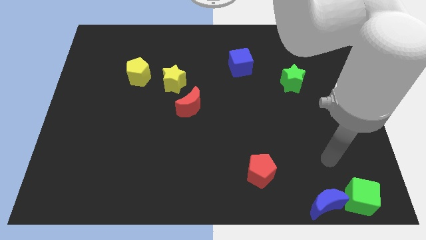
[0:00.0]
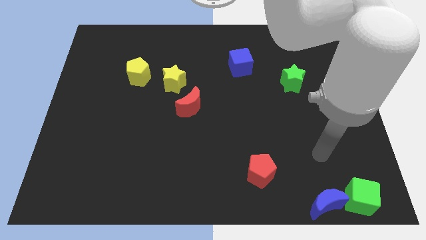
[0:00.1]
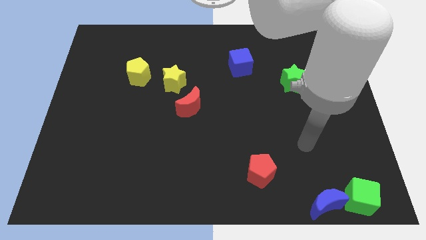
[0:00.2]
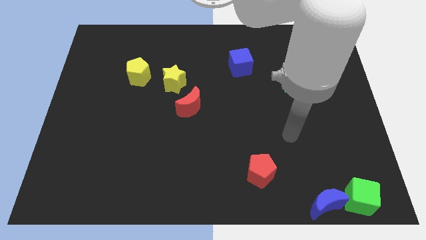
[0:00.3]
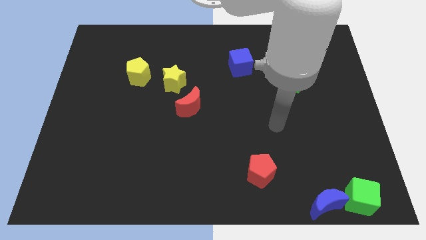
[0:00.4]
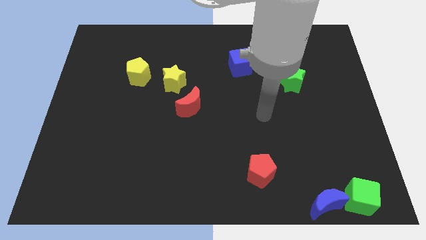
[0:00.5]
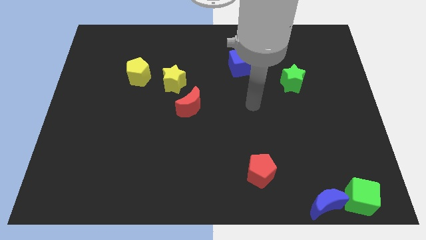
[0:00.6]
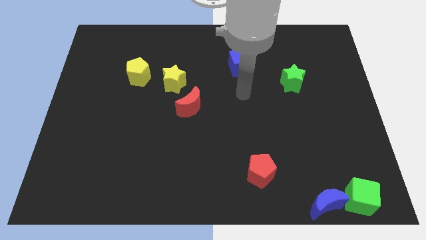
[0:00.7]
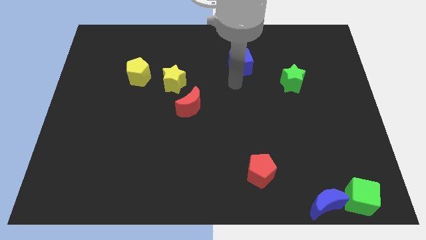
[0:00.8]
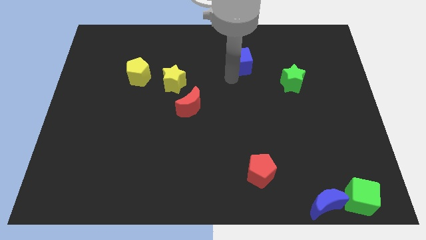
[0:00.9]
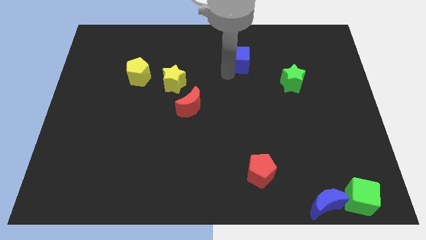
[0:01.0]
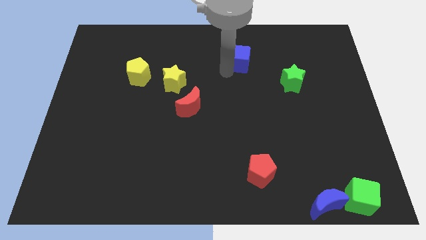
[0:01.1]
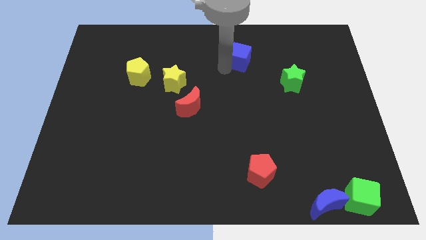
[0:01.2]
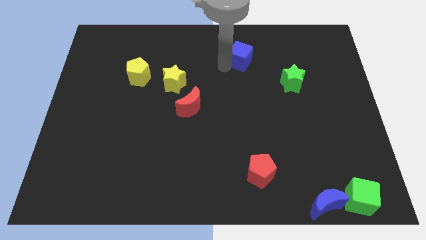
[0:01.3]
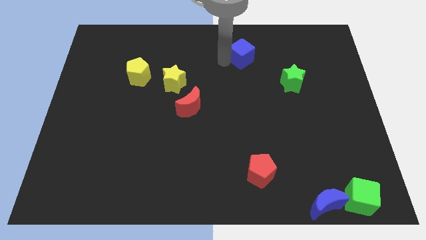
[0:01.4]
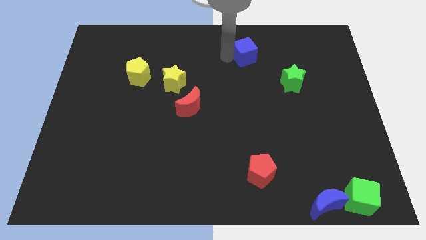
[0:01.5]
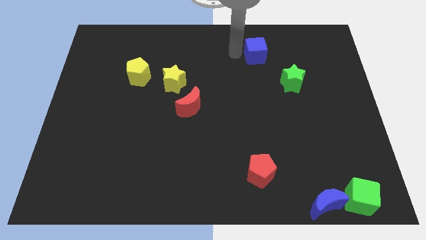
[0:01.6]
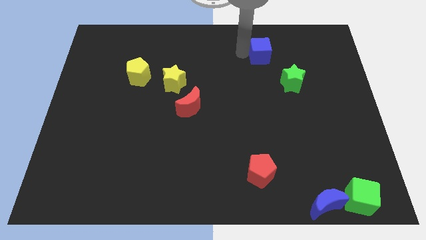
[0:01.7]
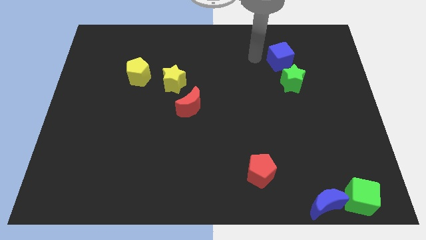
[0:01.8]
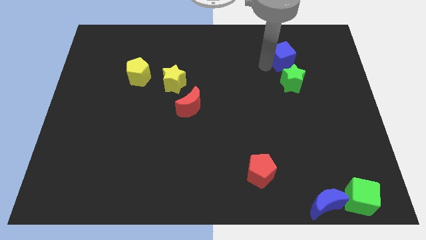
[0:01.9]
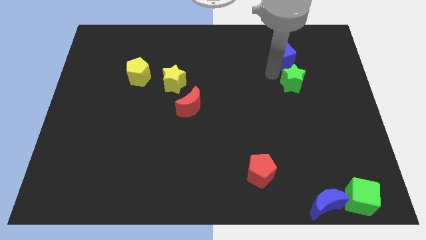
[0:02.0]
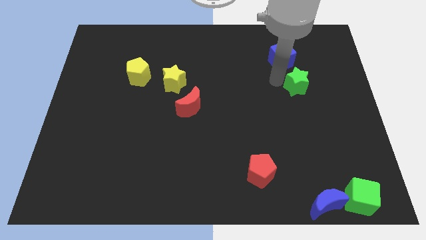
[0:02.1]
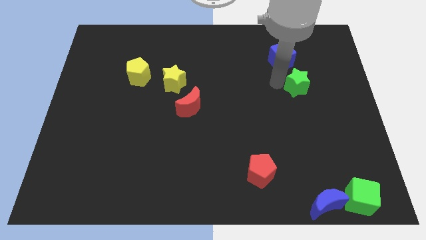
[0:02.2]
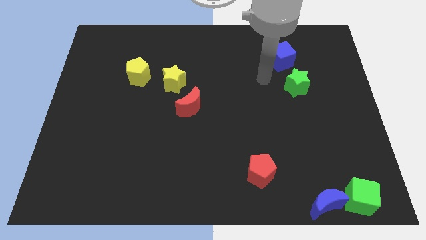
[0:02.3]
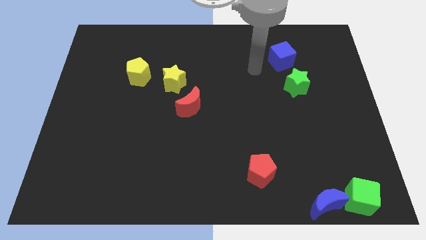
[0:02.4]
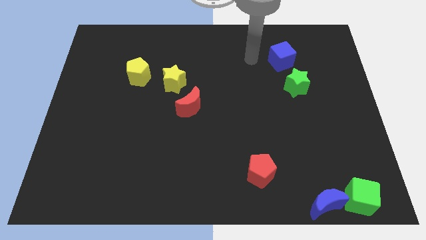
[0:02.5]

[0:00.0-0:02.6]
put the blue cube above the green star

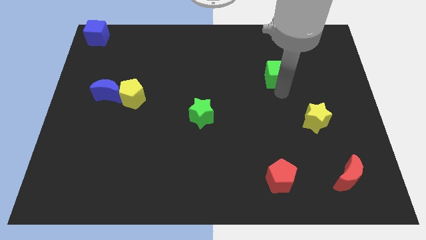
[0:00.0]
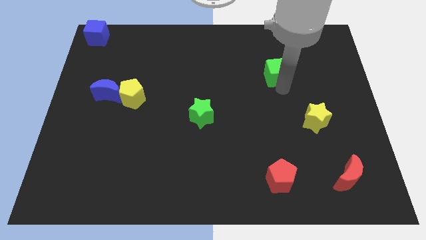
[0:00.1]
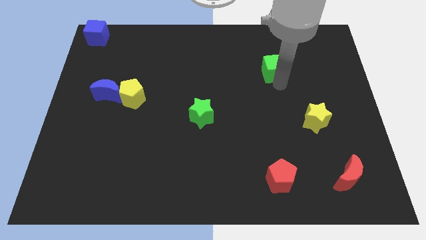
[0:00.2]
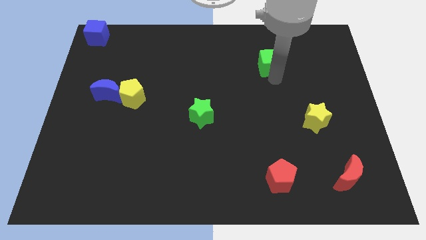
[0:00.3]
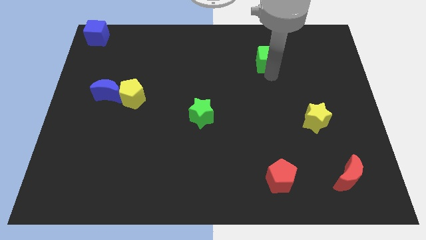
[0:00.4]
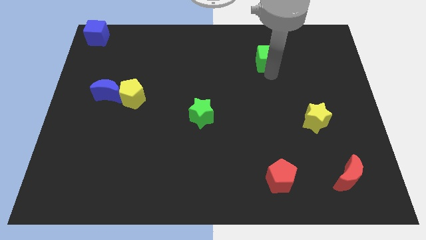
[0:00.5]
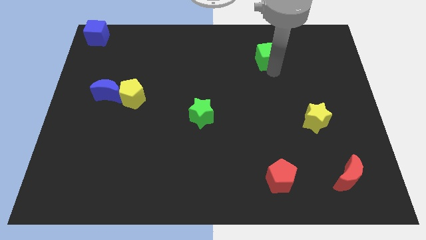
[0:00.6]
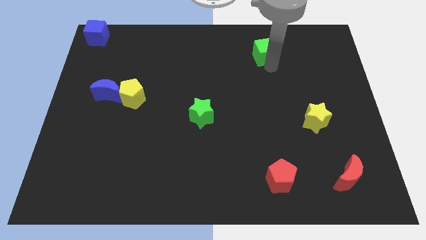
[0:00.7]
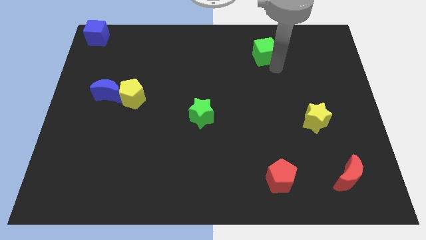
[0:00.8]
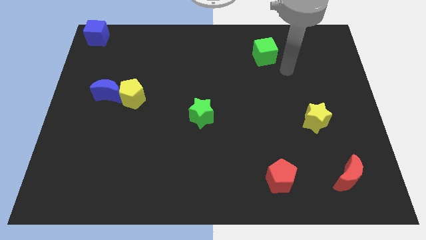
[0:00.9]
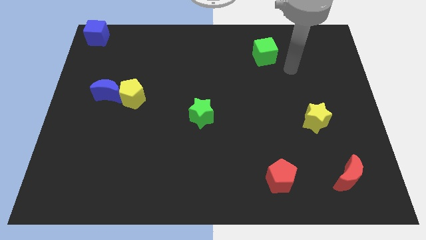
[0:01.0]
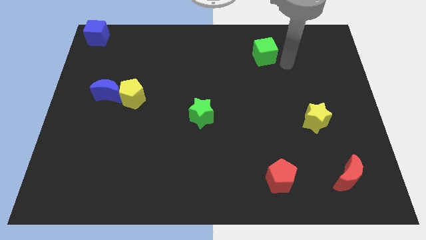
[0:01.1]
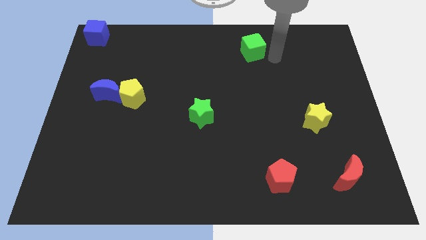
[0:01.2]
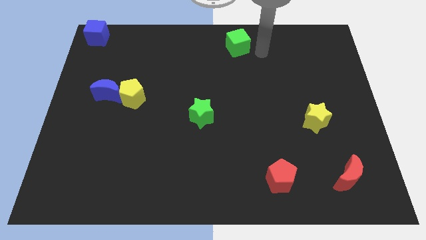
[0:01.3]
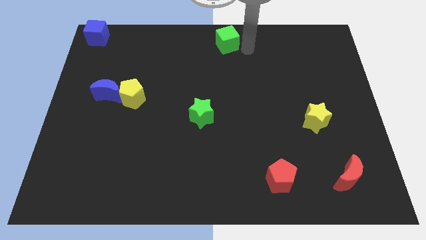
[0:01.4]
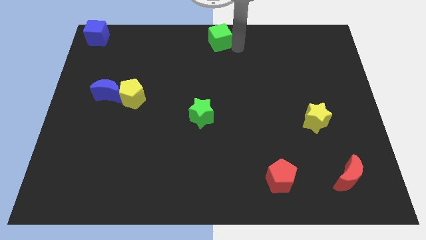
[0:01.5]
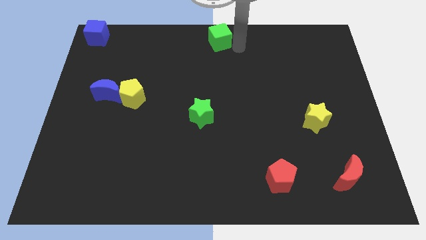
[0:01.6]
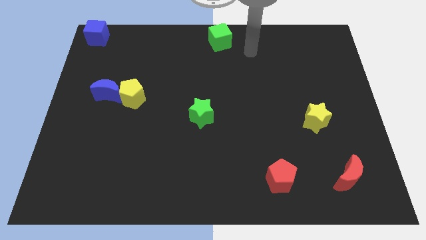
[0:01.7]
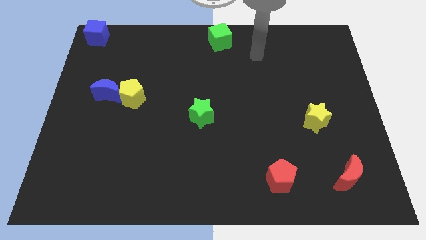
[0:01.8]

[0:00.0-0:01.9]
place the green cube at the top center of the board

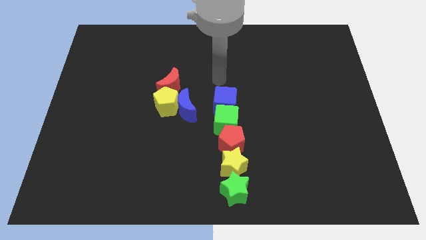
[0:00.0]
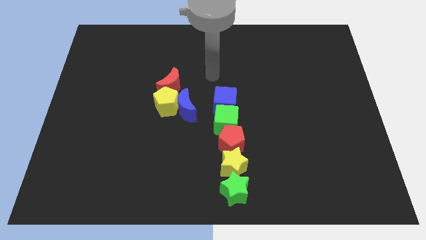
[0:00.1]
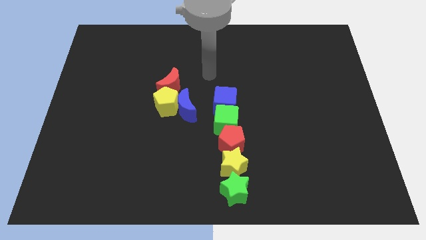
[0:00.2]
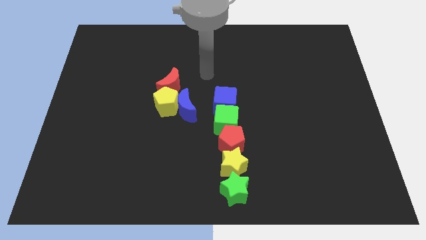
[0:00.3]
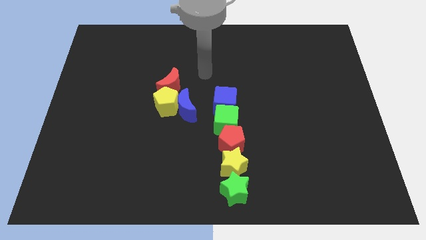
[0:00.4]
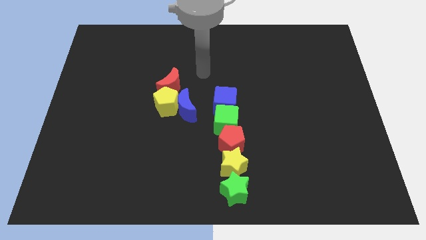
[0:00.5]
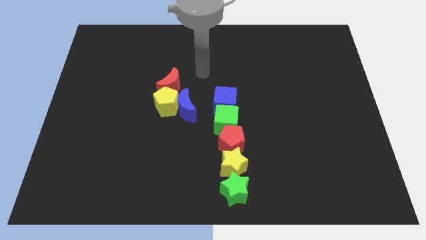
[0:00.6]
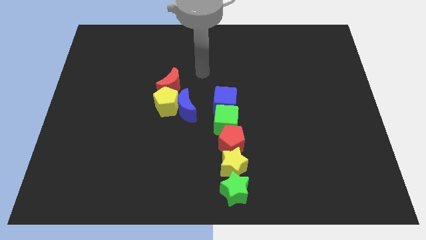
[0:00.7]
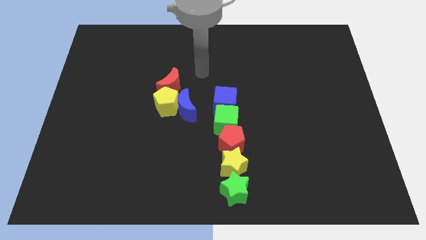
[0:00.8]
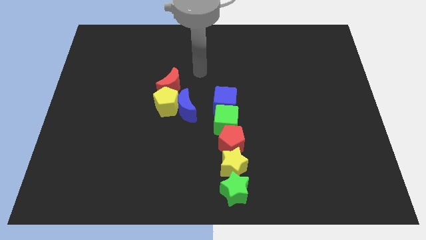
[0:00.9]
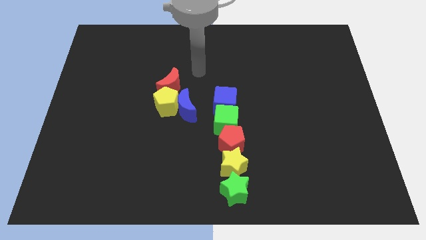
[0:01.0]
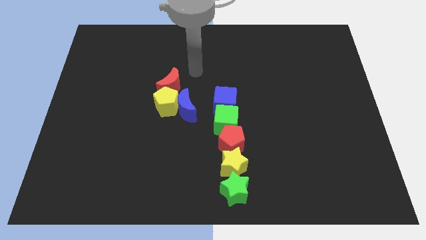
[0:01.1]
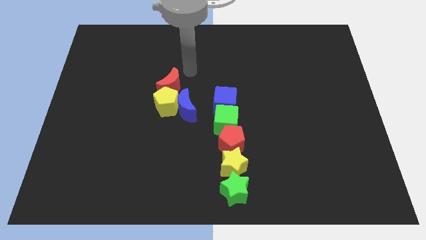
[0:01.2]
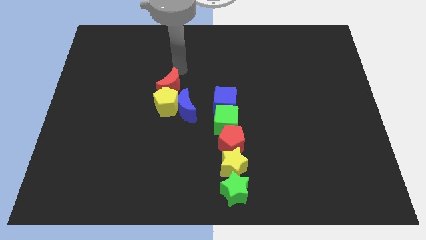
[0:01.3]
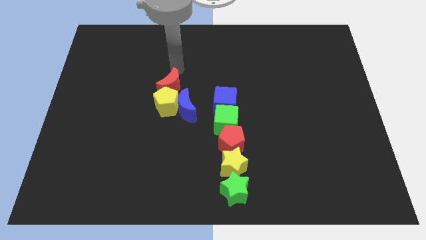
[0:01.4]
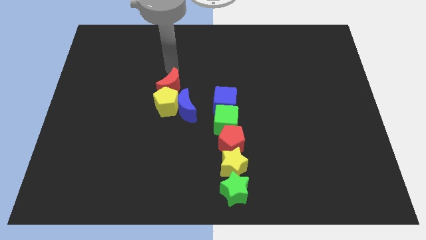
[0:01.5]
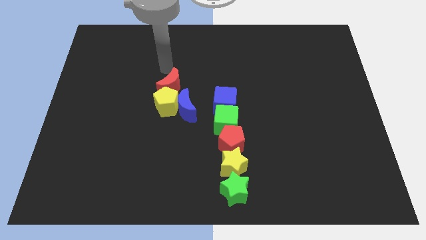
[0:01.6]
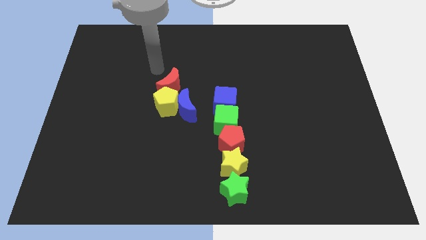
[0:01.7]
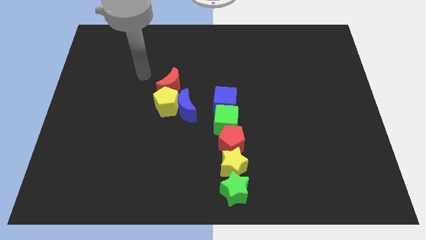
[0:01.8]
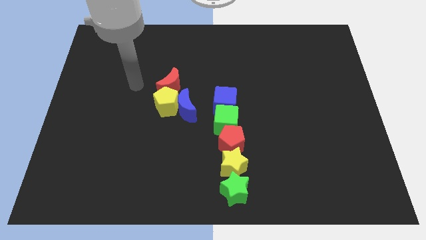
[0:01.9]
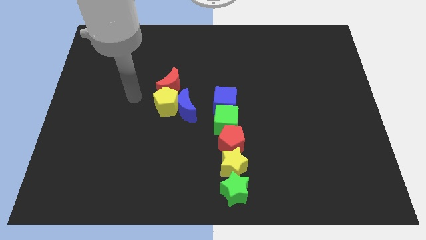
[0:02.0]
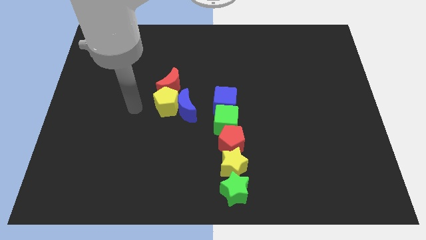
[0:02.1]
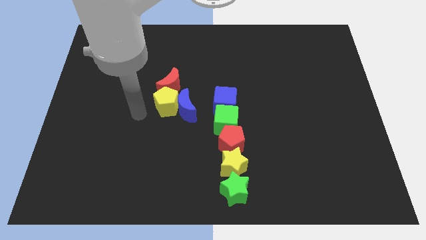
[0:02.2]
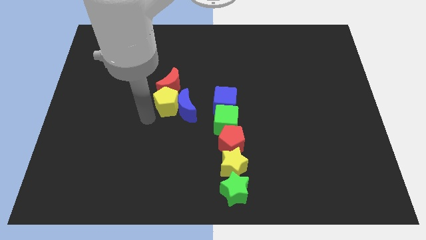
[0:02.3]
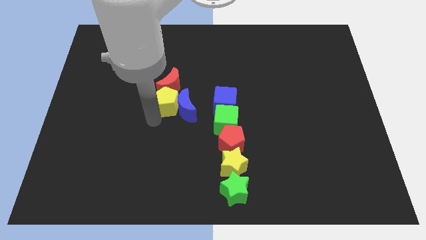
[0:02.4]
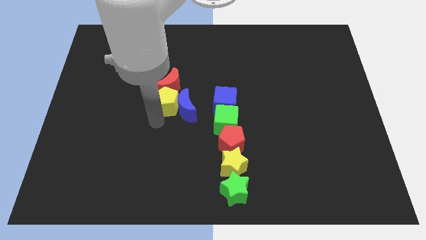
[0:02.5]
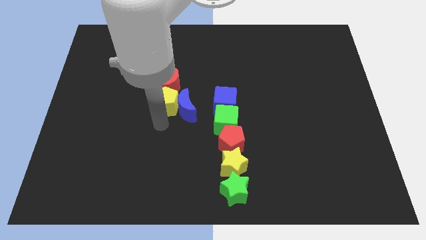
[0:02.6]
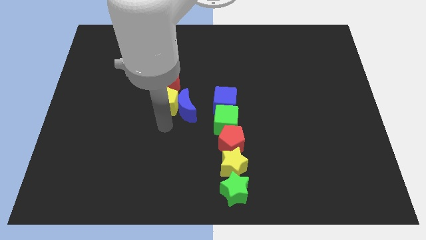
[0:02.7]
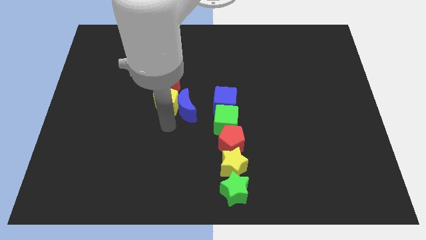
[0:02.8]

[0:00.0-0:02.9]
move the arm to the bottom of the blue moon

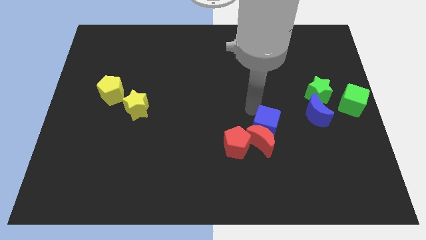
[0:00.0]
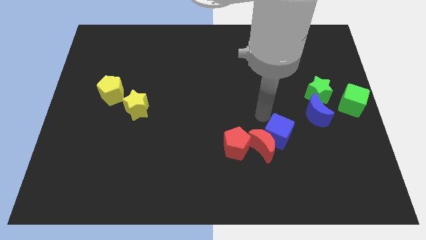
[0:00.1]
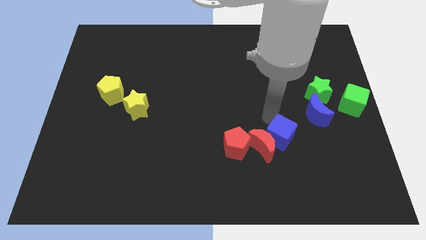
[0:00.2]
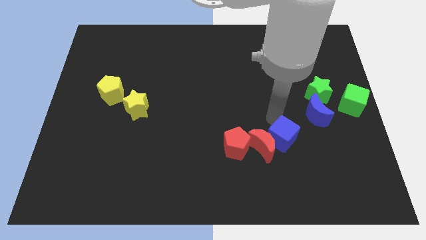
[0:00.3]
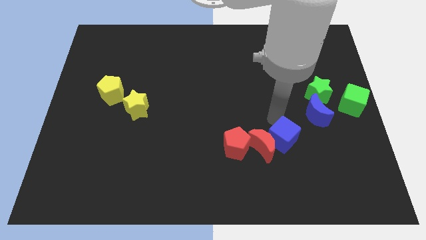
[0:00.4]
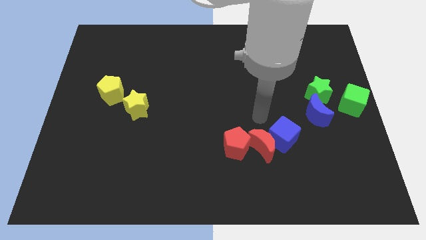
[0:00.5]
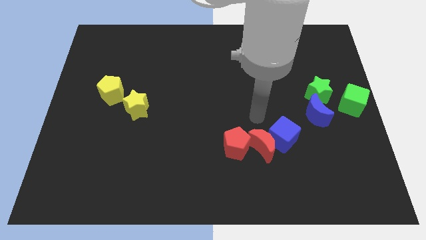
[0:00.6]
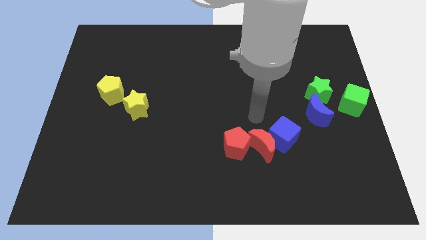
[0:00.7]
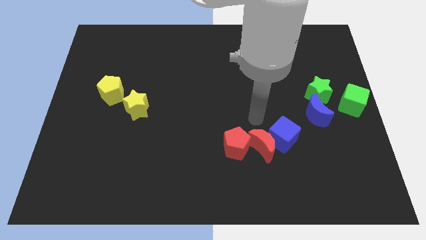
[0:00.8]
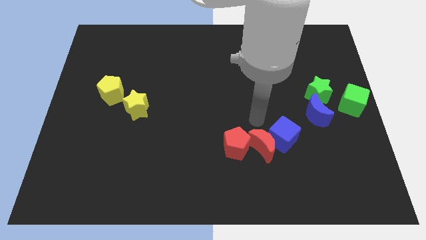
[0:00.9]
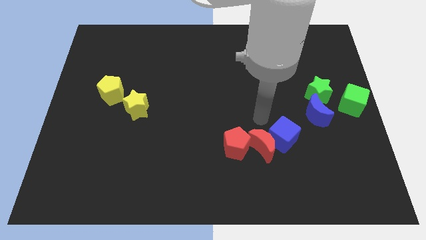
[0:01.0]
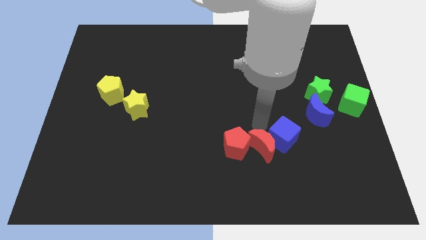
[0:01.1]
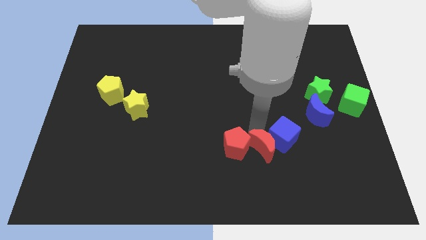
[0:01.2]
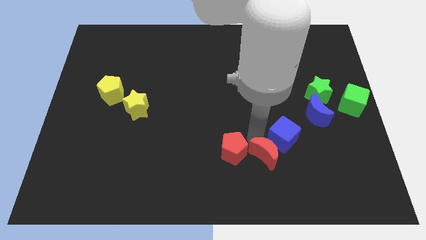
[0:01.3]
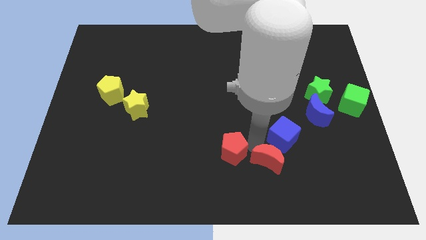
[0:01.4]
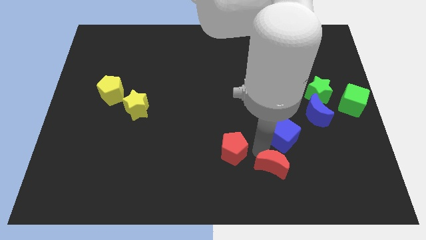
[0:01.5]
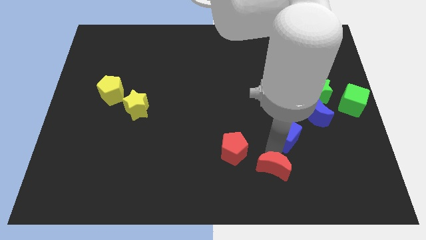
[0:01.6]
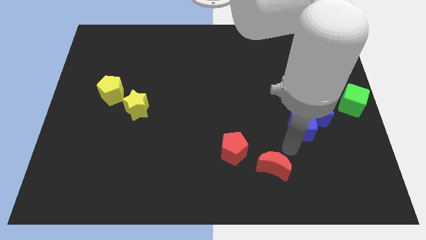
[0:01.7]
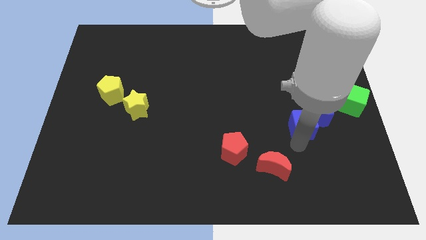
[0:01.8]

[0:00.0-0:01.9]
move red crescent and blue cube away from each other
